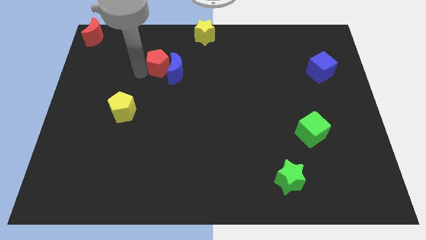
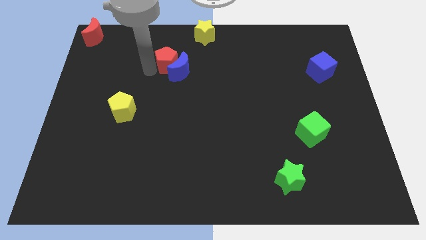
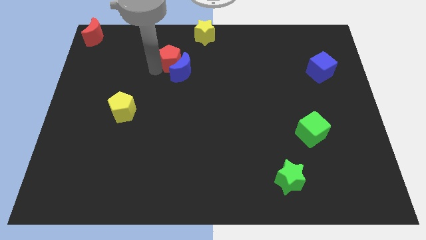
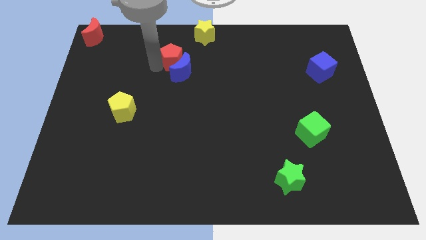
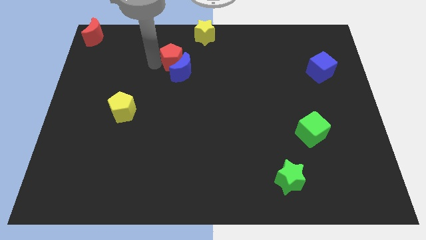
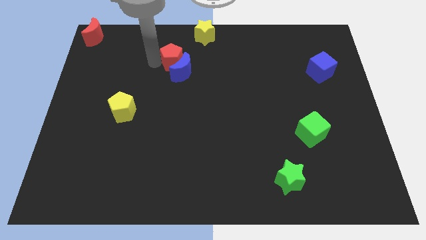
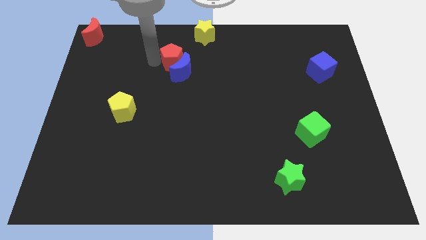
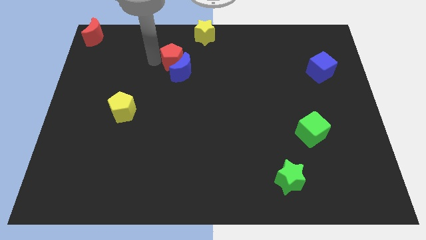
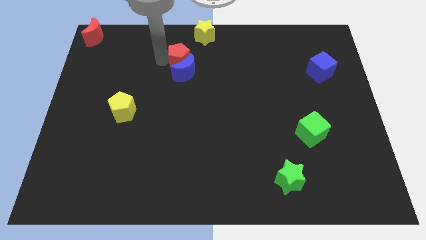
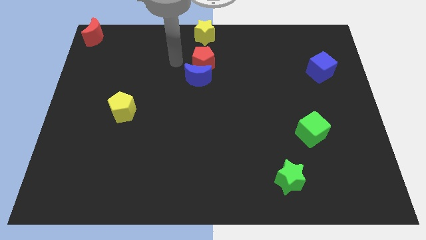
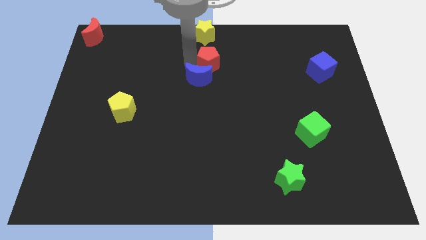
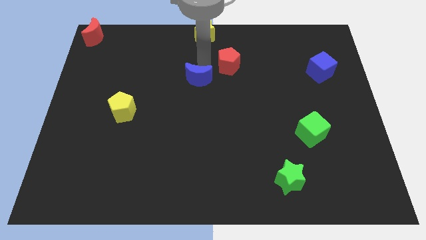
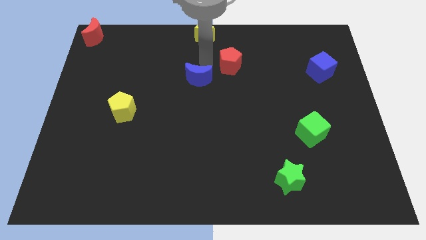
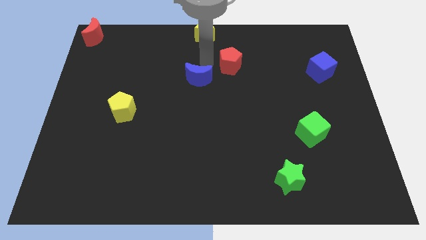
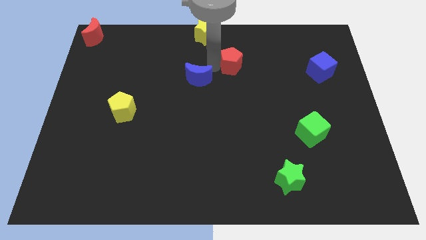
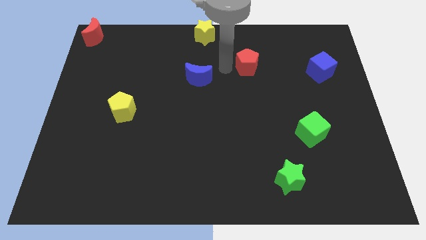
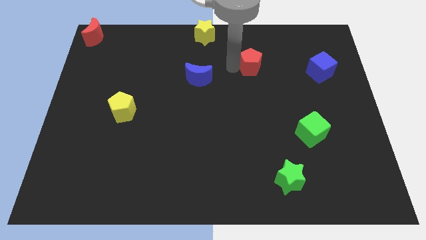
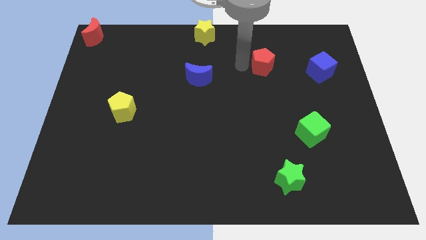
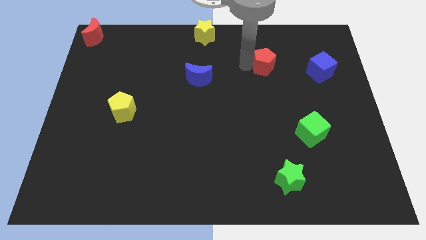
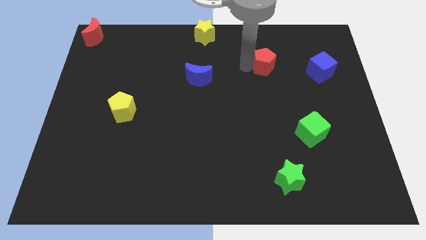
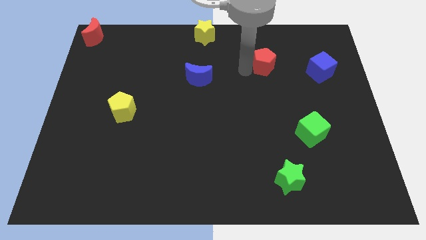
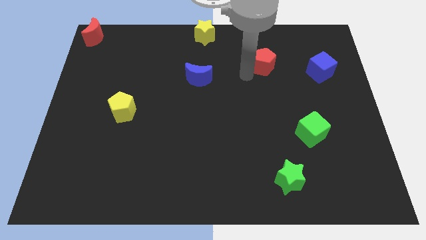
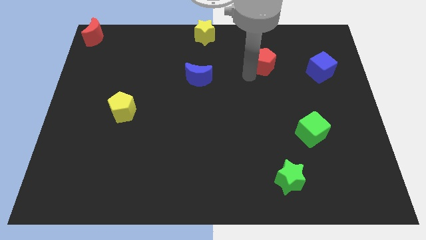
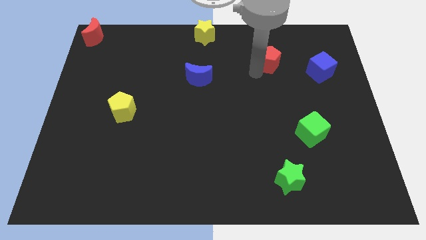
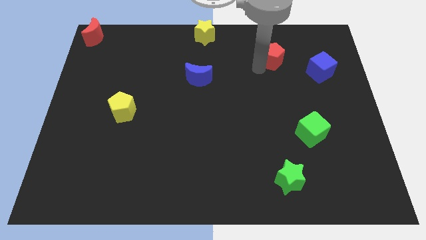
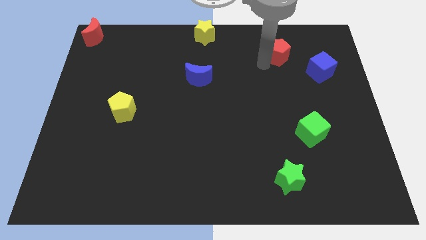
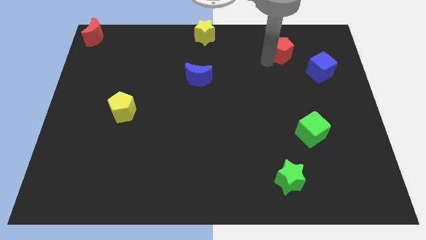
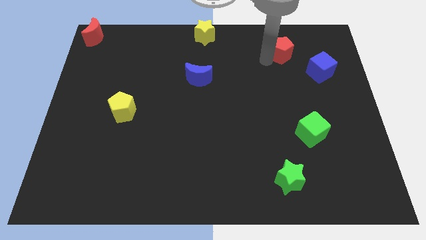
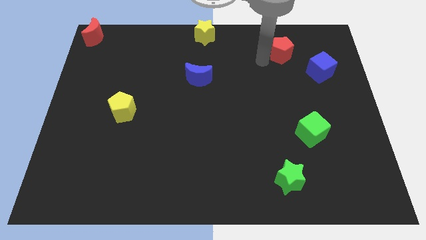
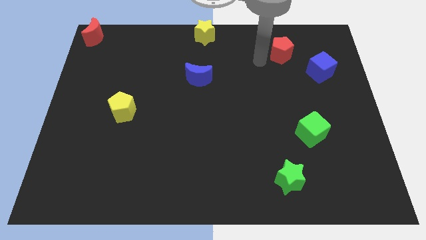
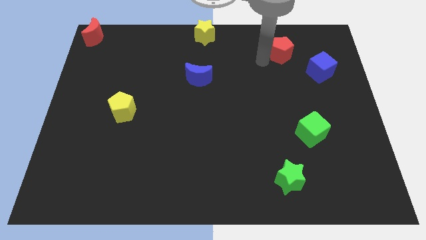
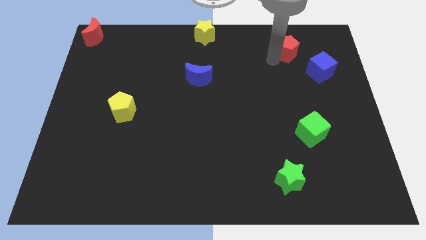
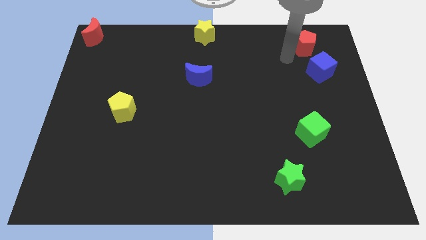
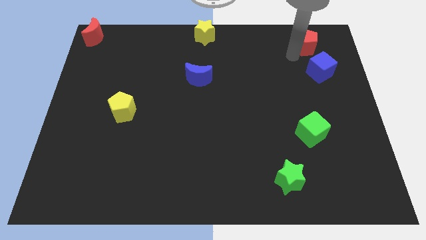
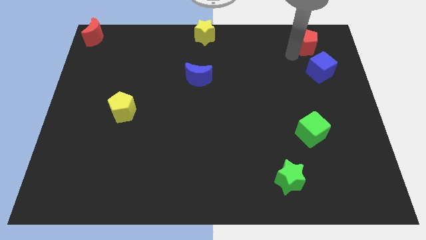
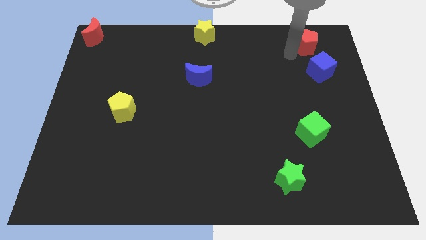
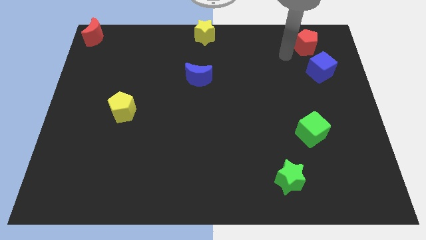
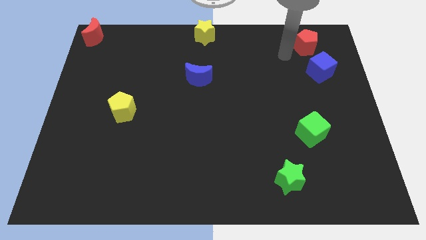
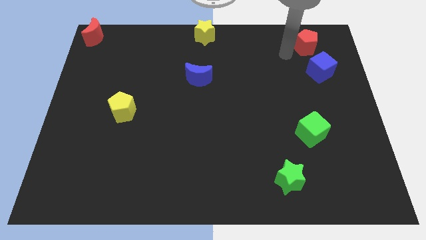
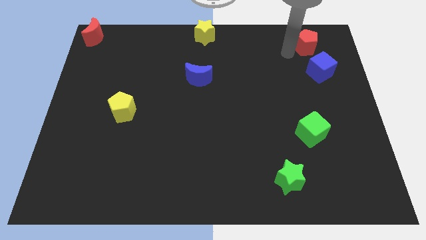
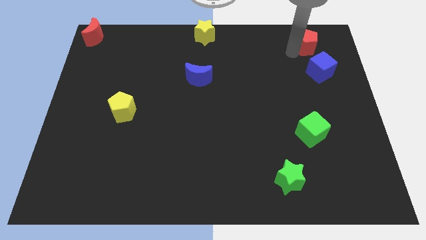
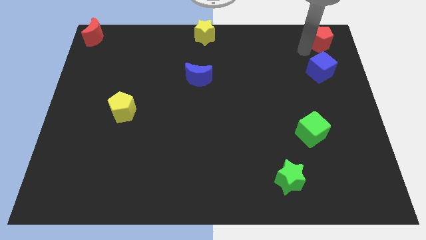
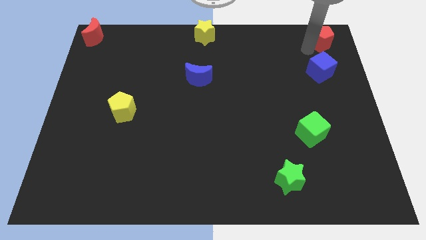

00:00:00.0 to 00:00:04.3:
put the red pentagon to the top side of the blue cube

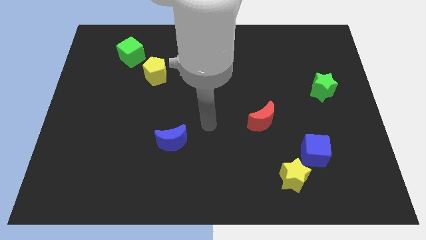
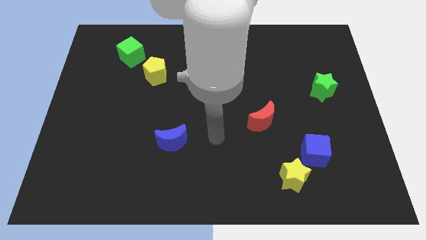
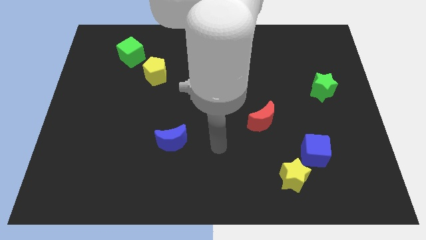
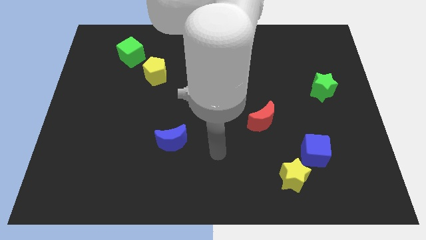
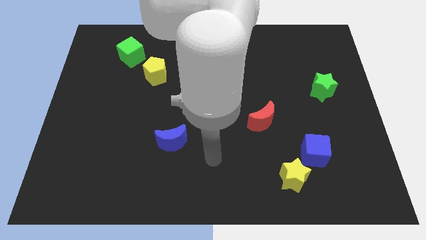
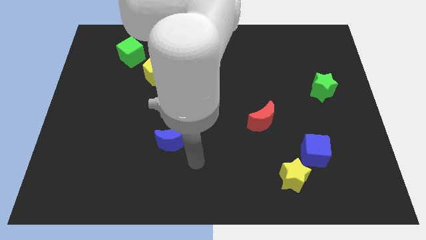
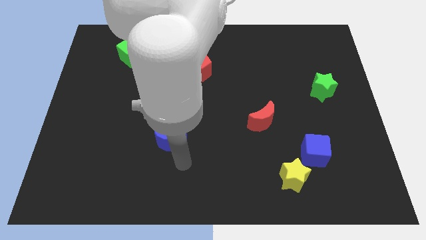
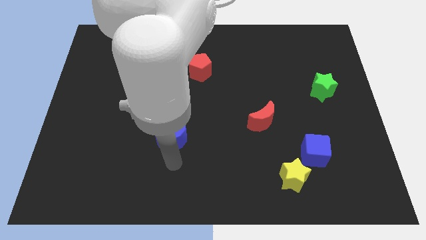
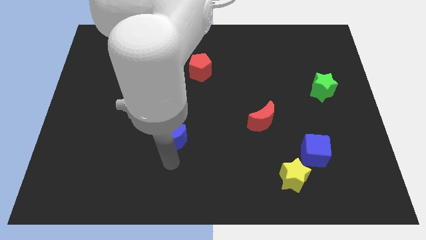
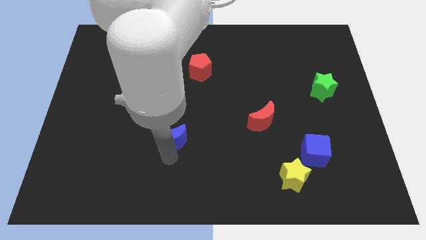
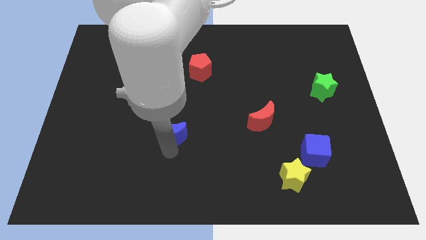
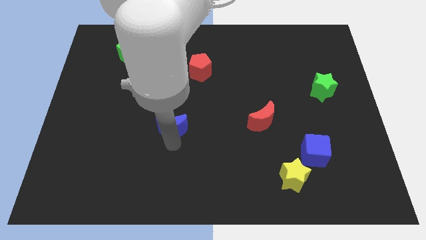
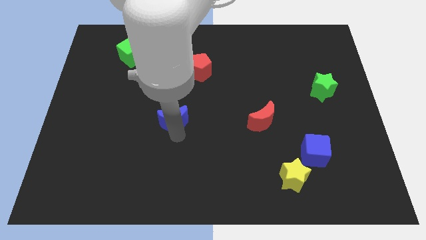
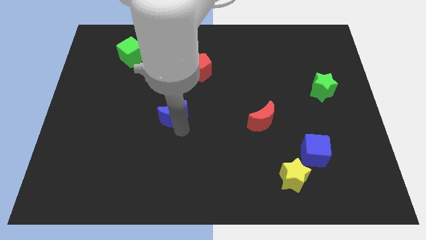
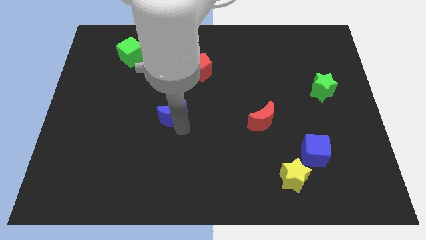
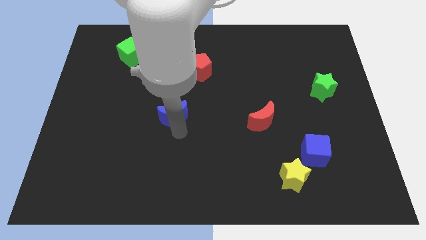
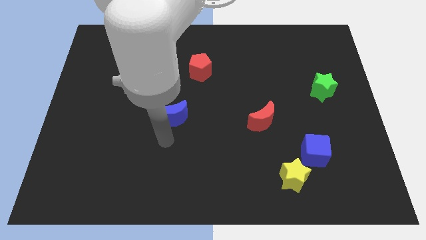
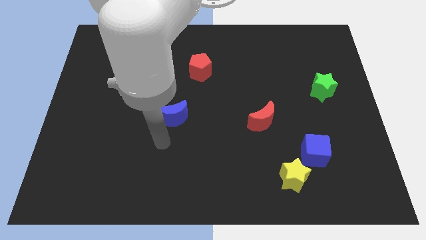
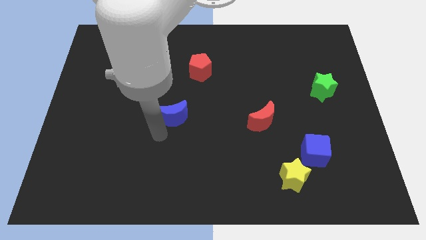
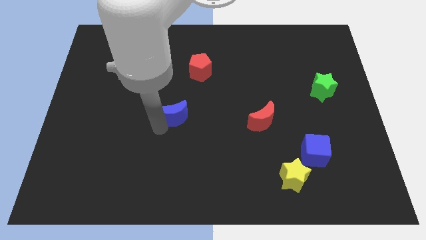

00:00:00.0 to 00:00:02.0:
push the blue moon towards the red pentagon

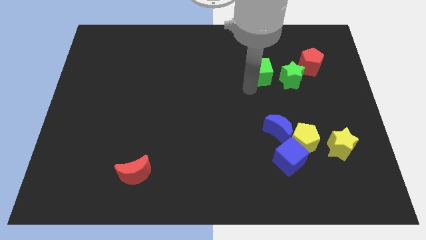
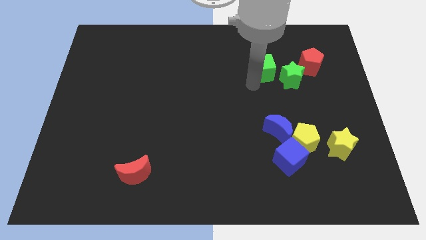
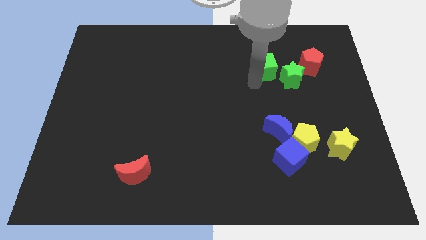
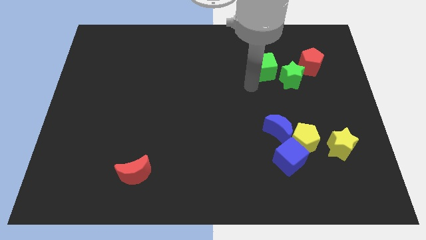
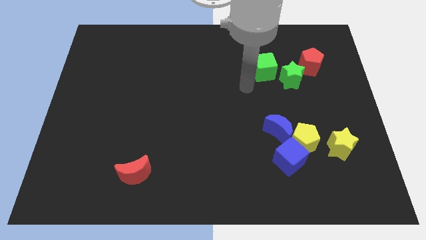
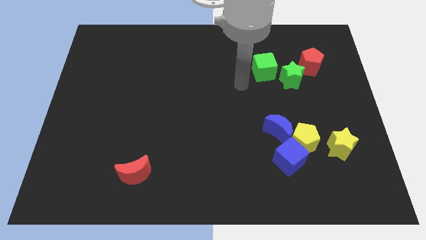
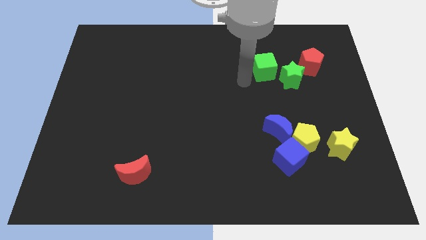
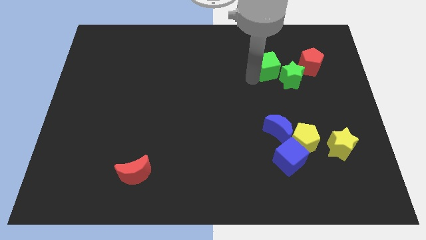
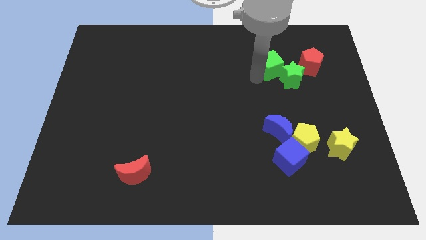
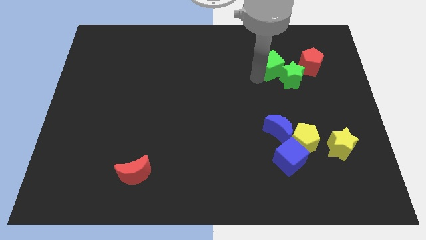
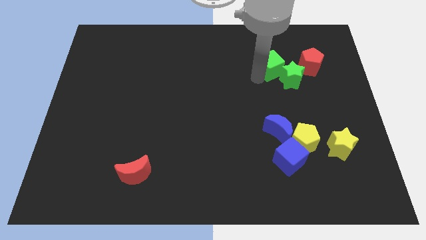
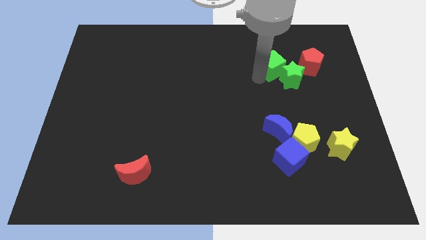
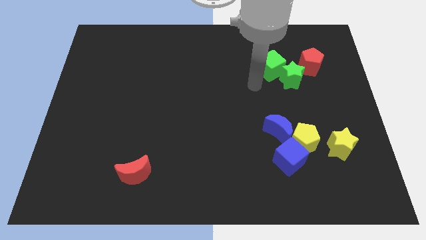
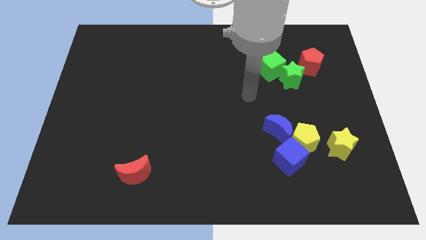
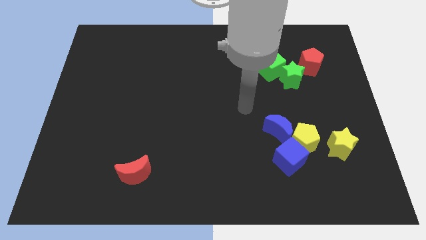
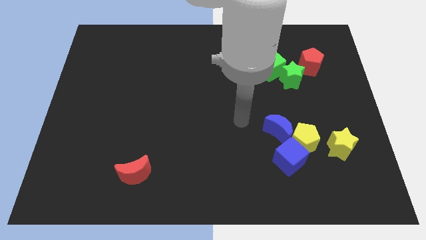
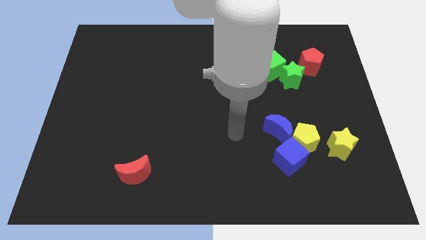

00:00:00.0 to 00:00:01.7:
push the green cube into the green star

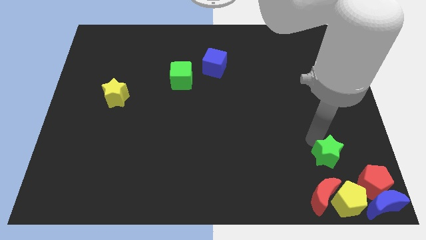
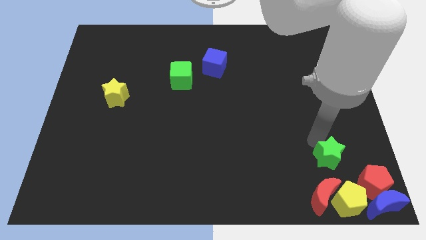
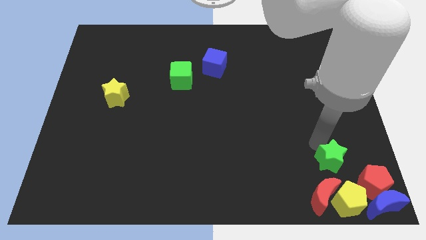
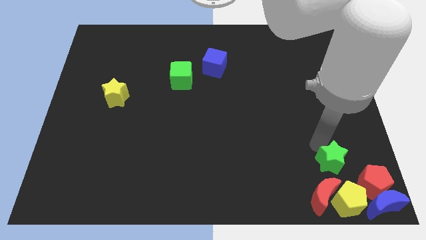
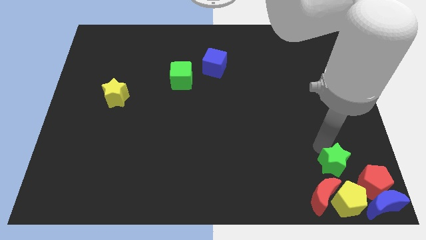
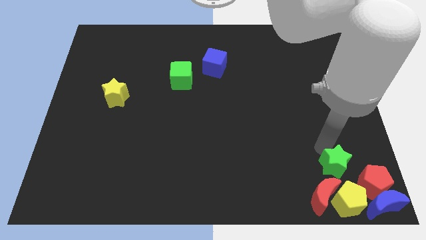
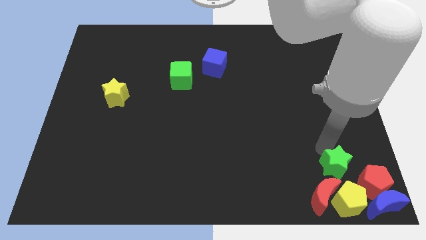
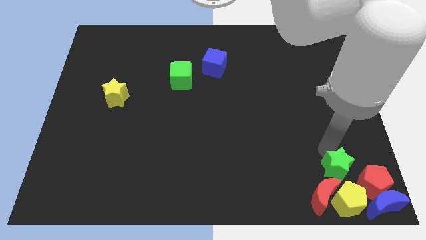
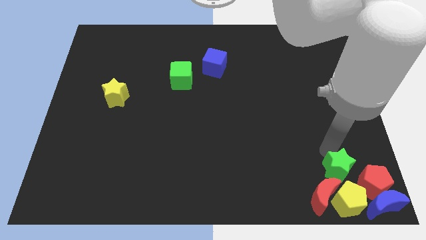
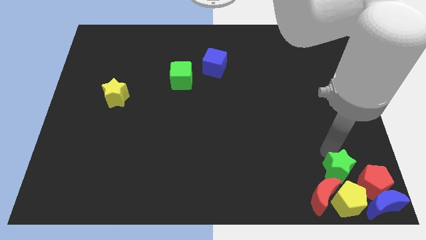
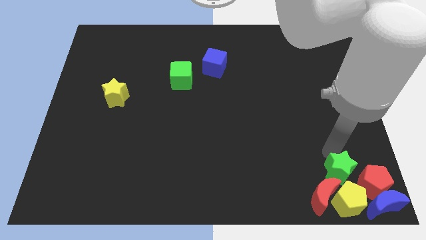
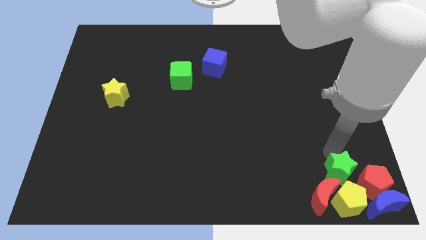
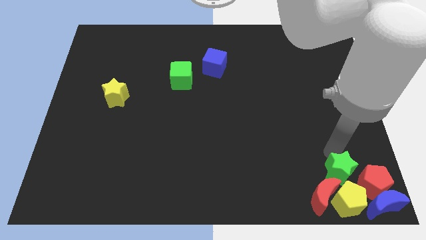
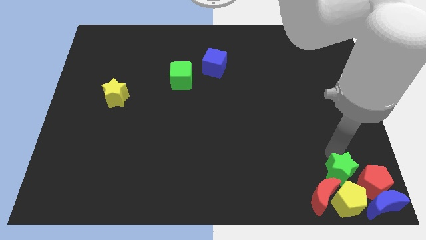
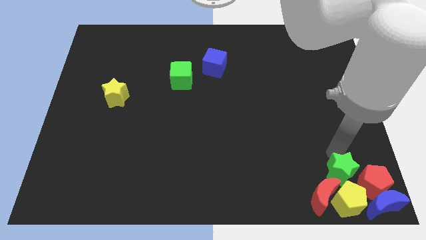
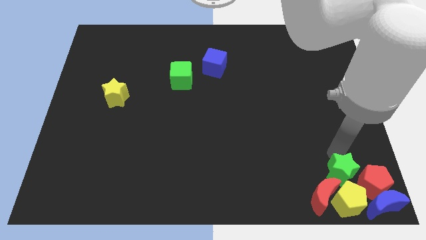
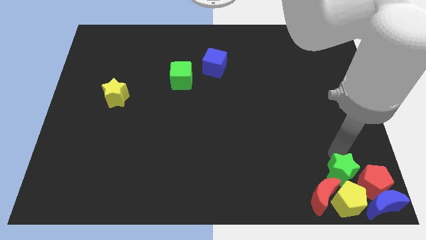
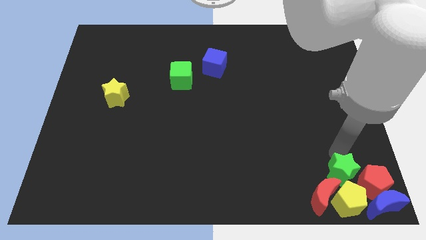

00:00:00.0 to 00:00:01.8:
place the green star above the yellow pentagon
